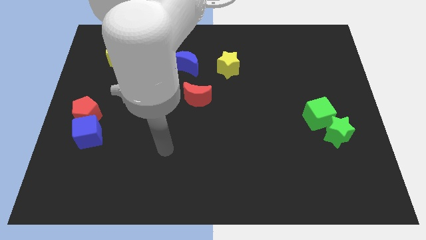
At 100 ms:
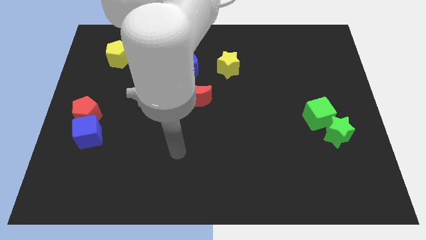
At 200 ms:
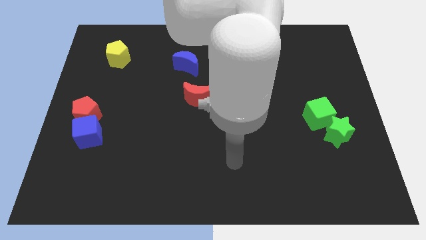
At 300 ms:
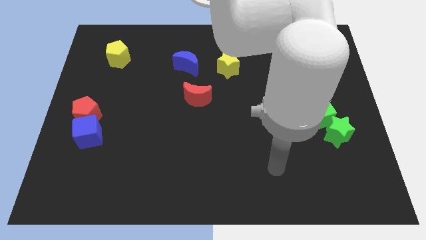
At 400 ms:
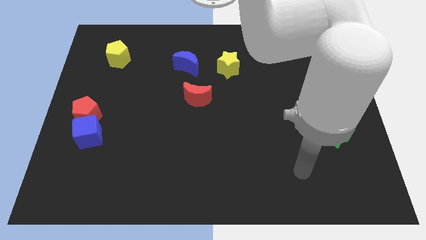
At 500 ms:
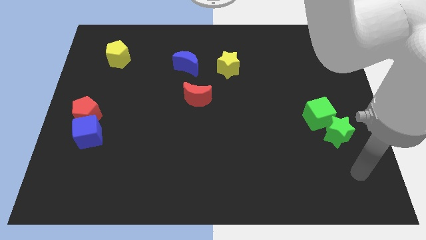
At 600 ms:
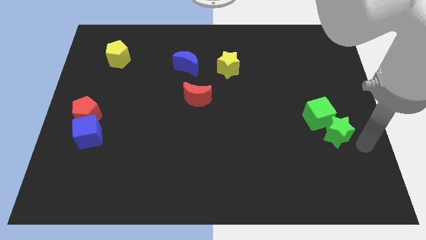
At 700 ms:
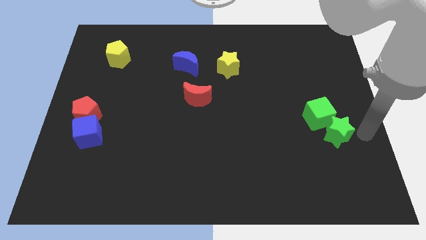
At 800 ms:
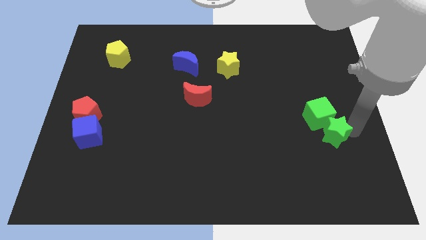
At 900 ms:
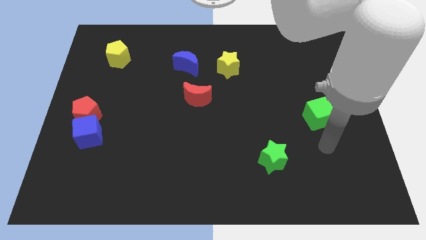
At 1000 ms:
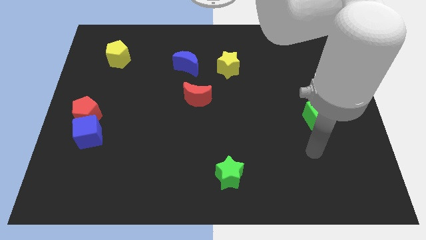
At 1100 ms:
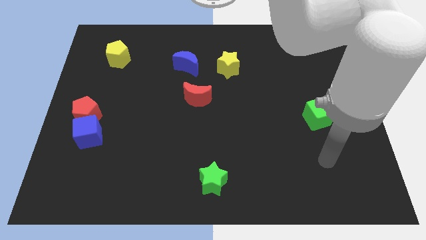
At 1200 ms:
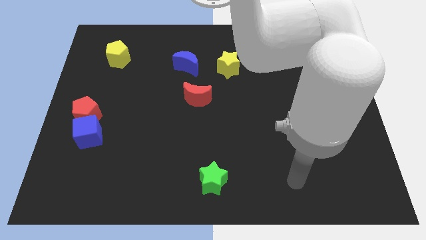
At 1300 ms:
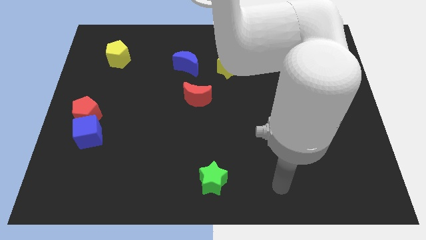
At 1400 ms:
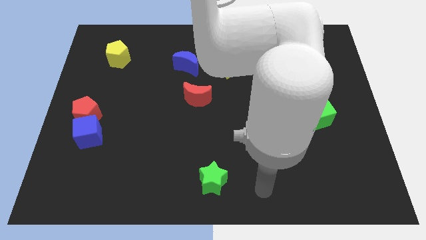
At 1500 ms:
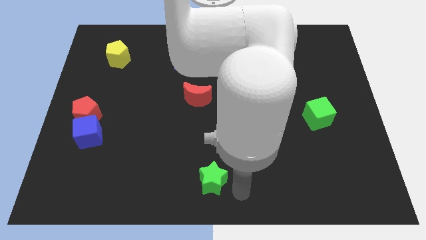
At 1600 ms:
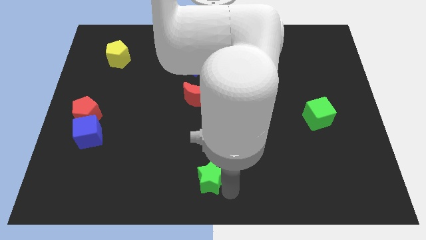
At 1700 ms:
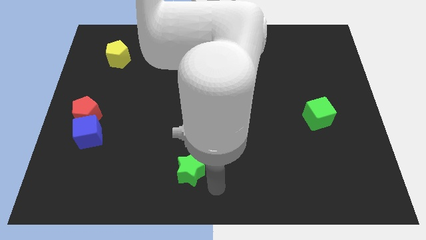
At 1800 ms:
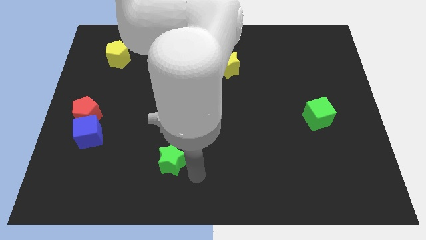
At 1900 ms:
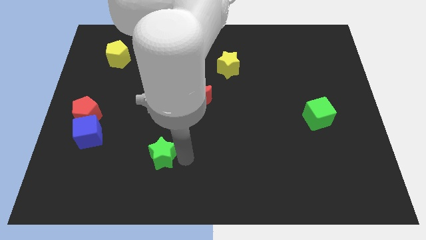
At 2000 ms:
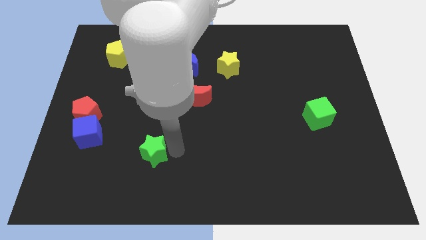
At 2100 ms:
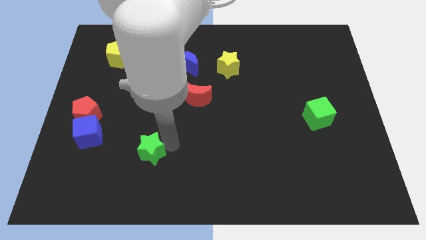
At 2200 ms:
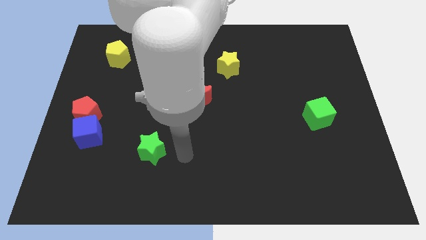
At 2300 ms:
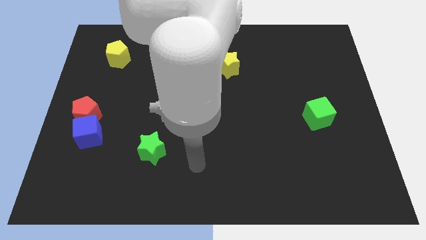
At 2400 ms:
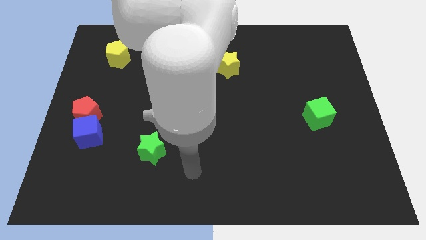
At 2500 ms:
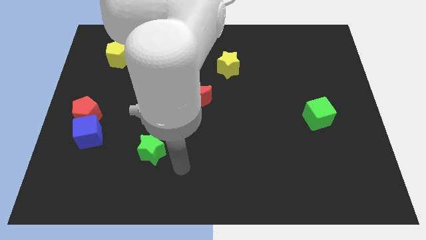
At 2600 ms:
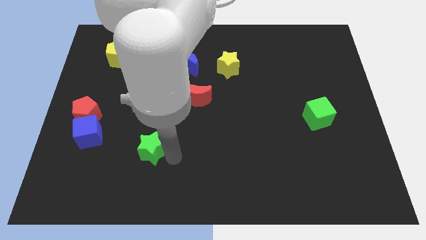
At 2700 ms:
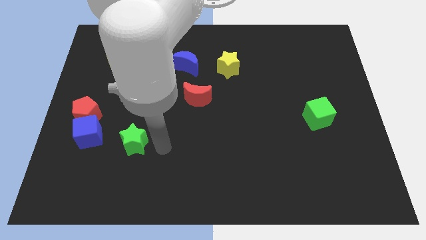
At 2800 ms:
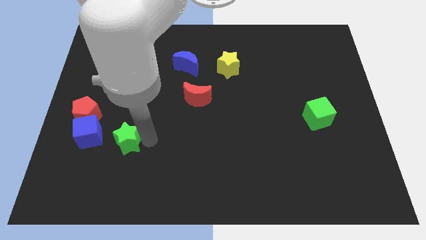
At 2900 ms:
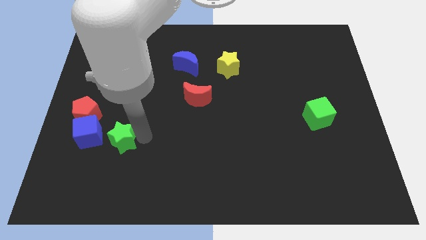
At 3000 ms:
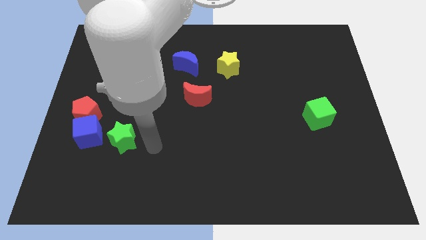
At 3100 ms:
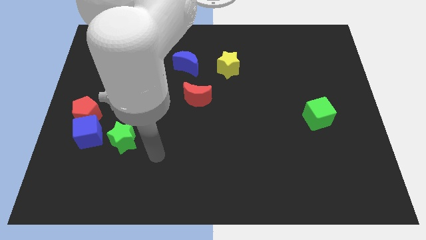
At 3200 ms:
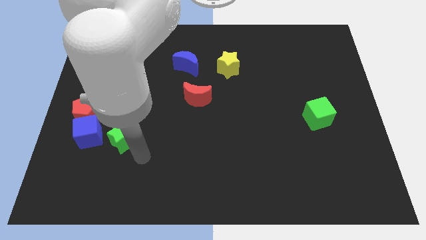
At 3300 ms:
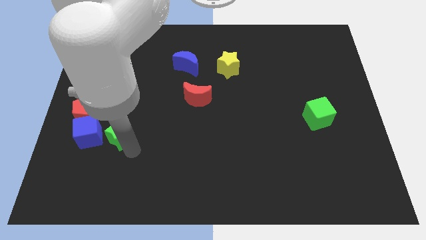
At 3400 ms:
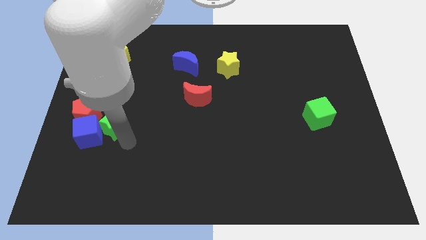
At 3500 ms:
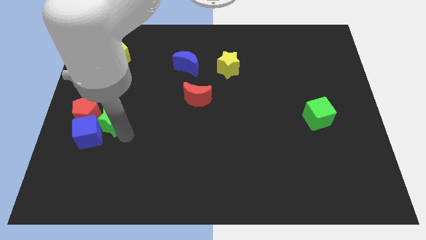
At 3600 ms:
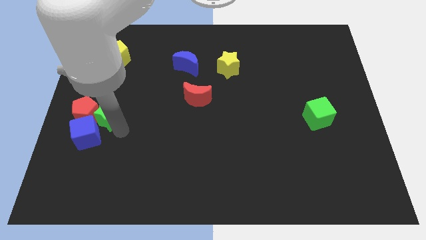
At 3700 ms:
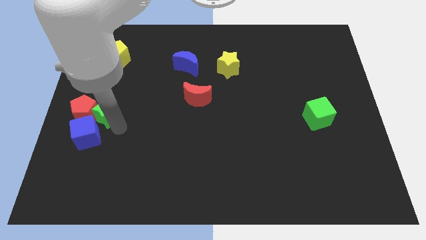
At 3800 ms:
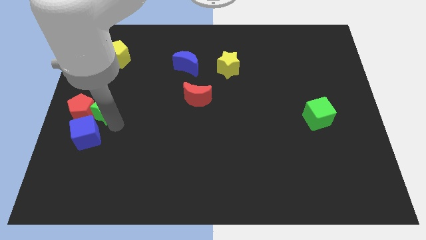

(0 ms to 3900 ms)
put the green star close to the red pentagon

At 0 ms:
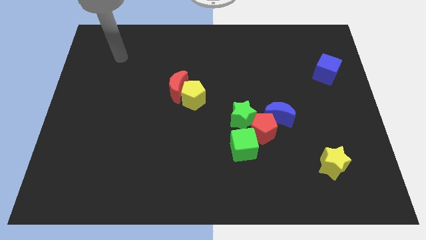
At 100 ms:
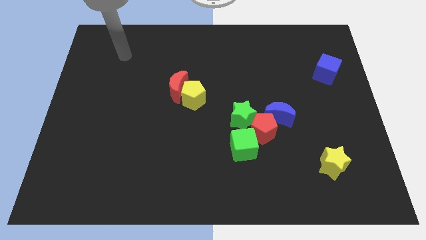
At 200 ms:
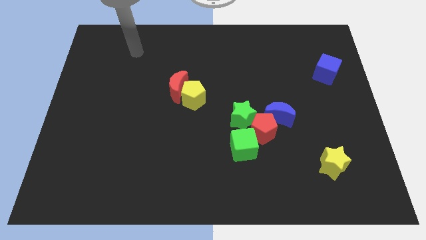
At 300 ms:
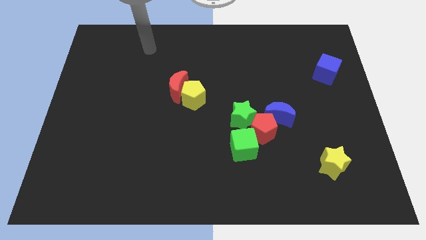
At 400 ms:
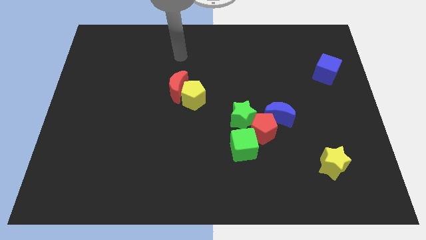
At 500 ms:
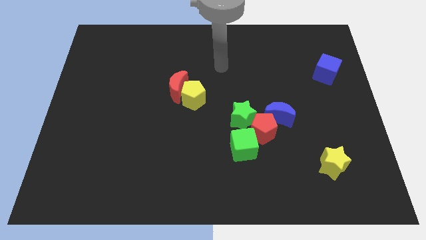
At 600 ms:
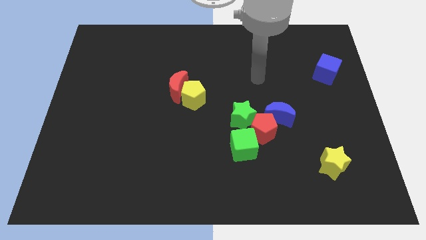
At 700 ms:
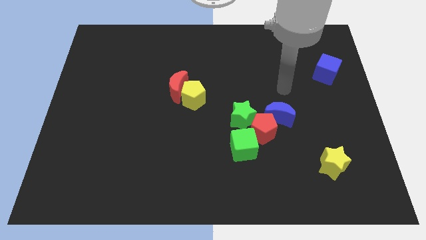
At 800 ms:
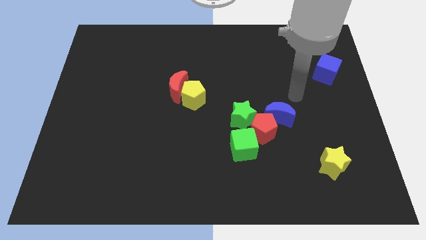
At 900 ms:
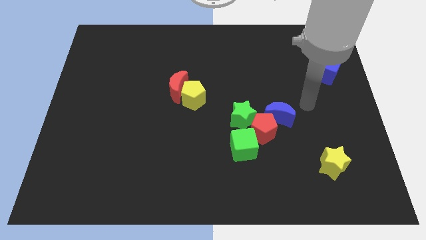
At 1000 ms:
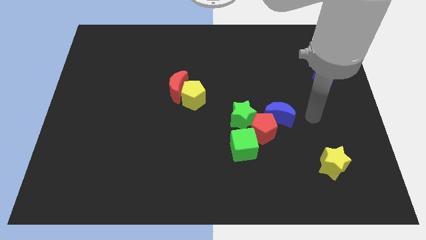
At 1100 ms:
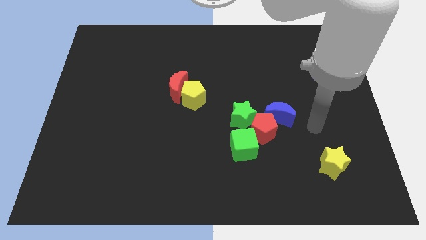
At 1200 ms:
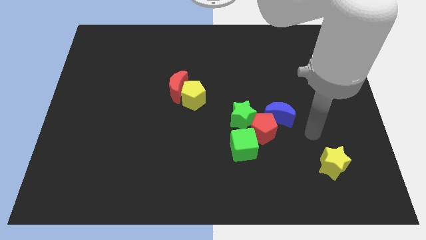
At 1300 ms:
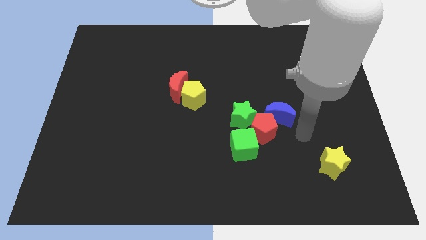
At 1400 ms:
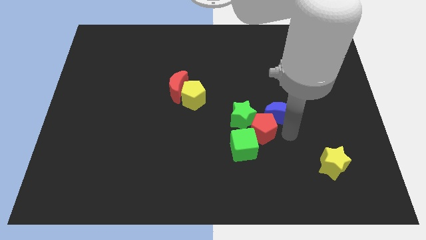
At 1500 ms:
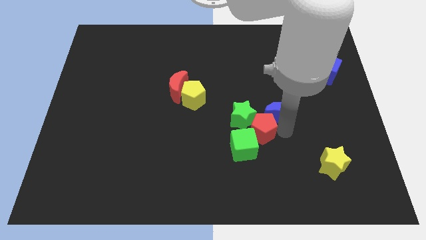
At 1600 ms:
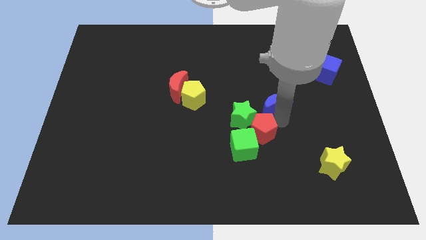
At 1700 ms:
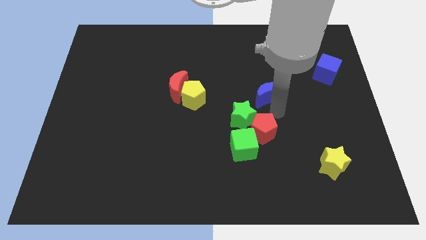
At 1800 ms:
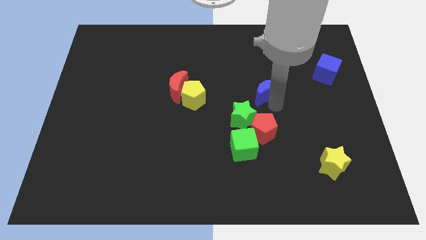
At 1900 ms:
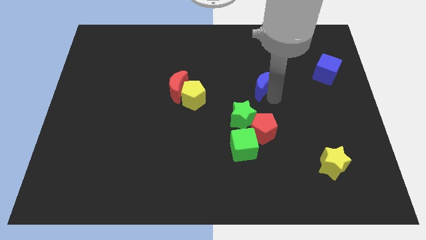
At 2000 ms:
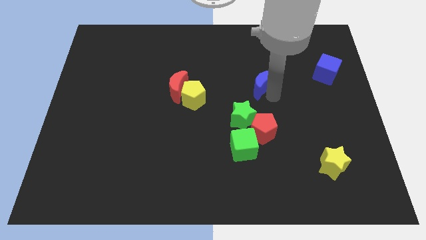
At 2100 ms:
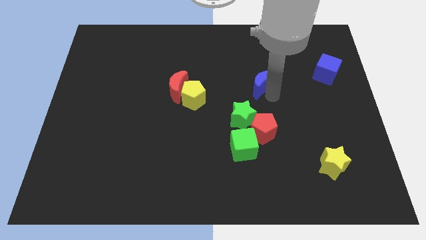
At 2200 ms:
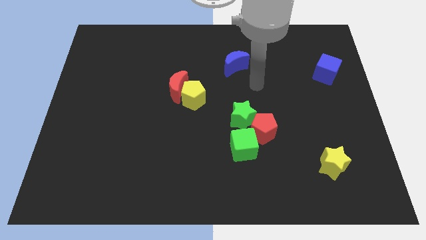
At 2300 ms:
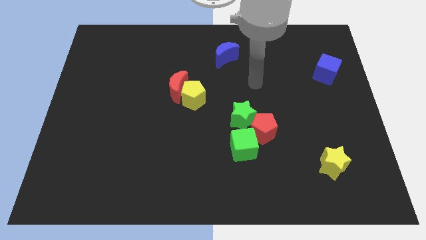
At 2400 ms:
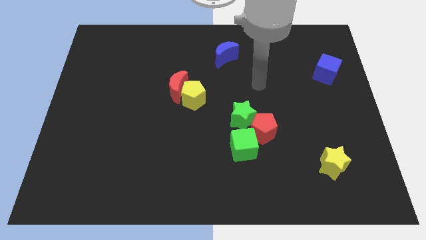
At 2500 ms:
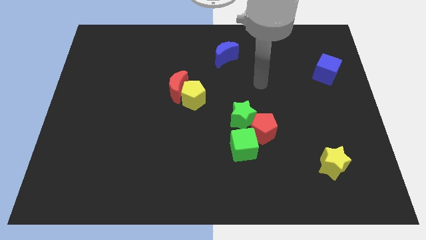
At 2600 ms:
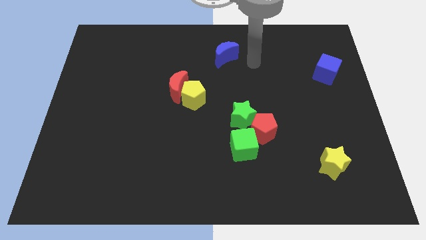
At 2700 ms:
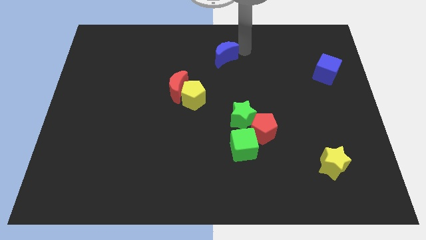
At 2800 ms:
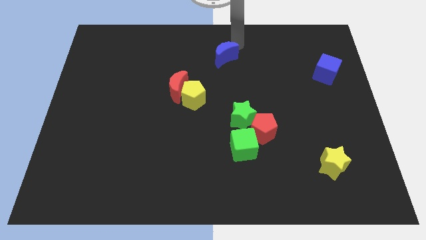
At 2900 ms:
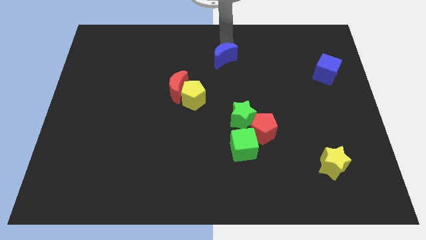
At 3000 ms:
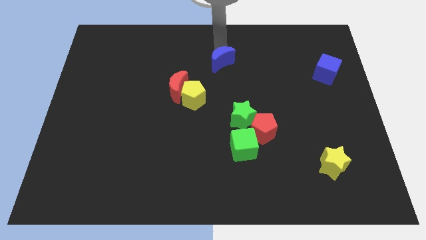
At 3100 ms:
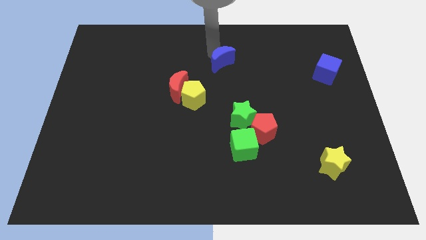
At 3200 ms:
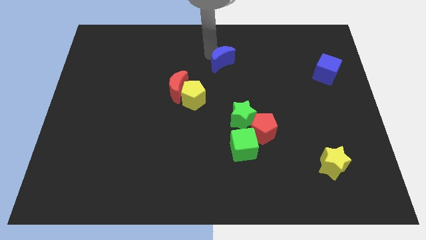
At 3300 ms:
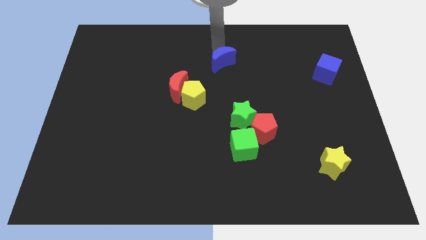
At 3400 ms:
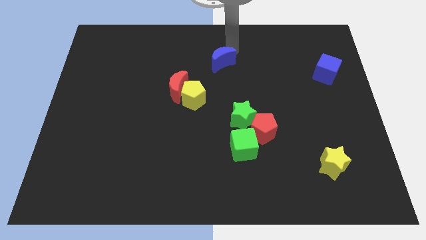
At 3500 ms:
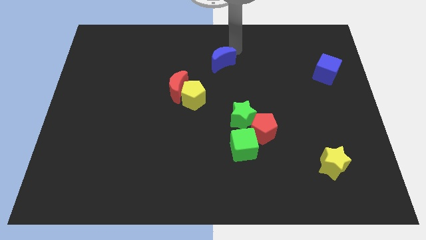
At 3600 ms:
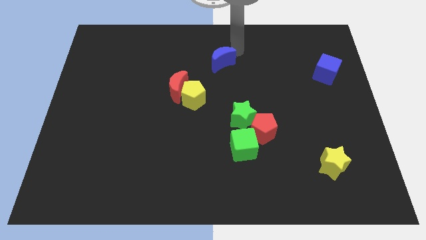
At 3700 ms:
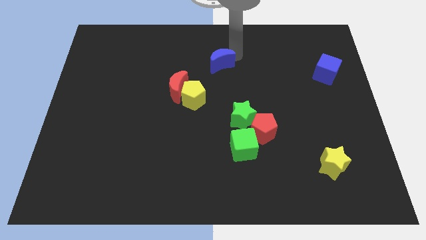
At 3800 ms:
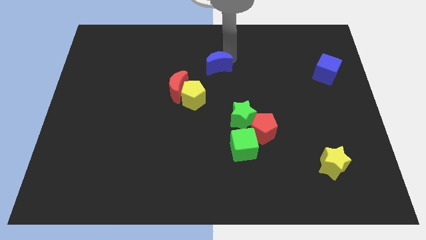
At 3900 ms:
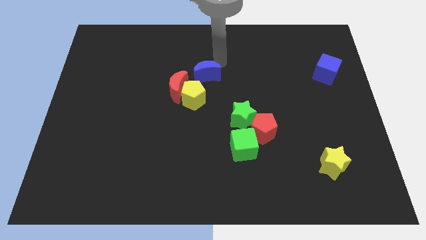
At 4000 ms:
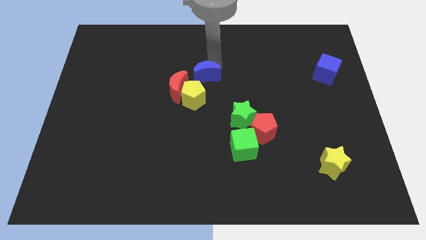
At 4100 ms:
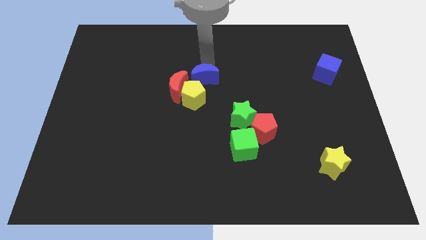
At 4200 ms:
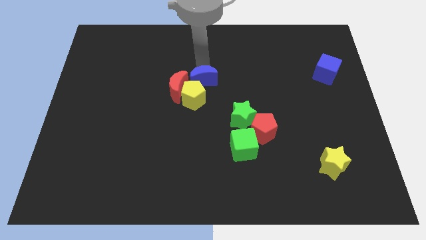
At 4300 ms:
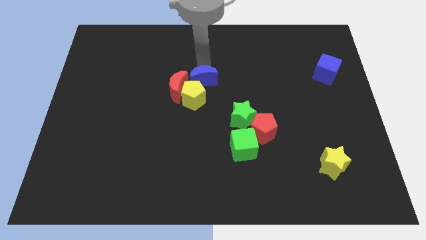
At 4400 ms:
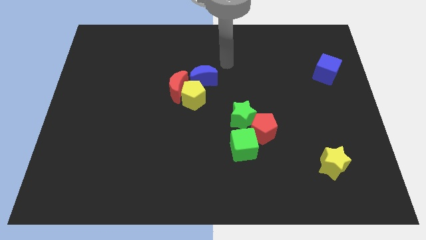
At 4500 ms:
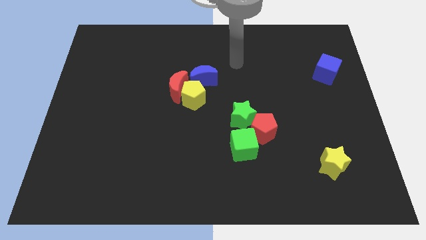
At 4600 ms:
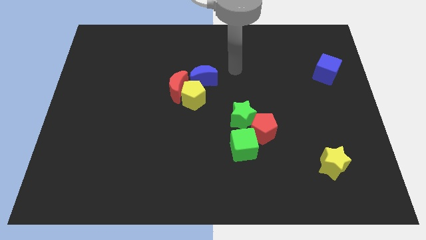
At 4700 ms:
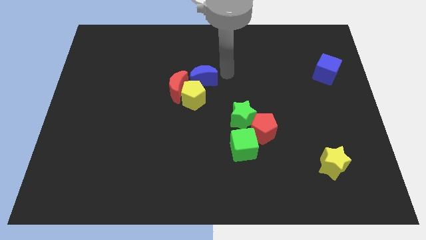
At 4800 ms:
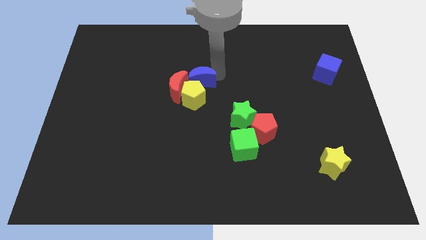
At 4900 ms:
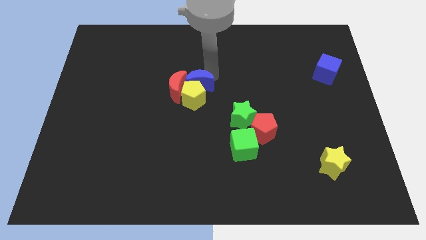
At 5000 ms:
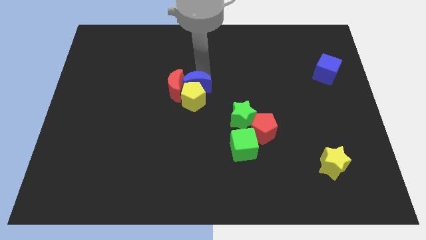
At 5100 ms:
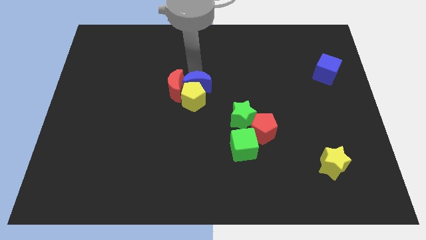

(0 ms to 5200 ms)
move the blue moon towards the red moon
